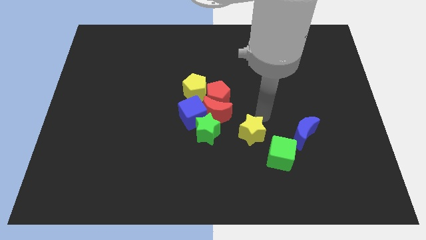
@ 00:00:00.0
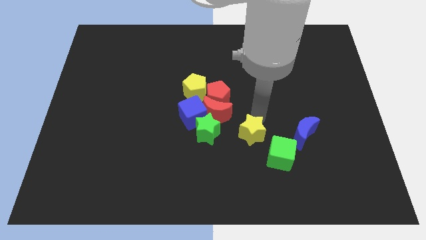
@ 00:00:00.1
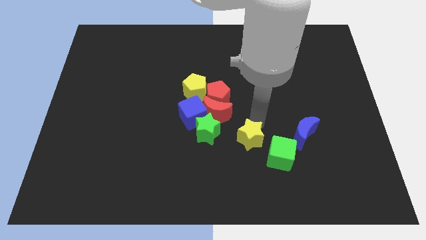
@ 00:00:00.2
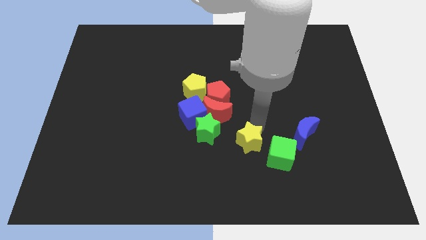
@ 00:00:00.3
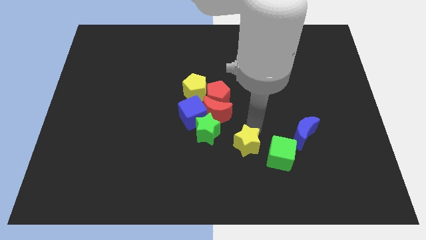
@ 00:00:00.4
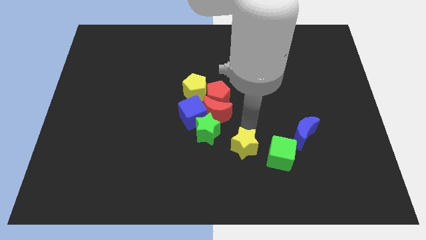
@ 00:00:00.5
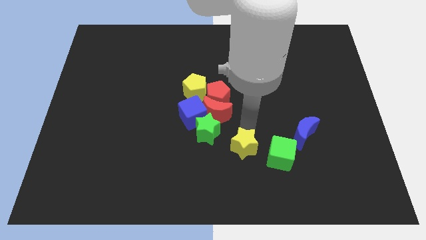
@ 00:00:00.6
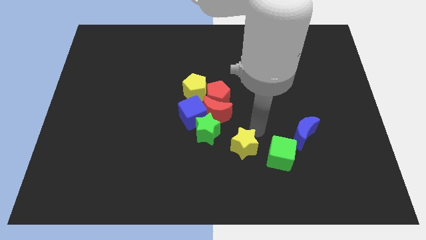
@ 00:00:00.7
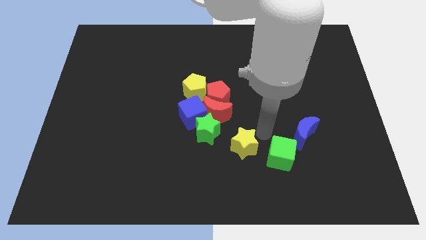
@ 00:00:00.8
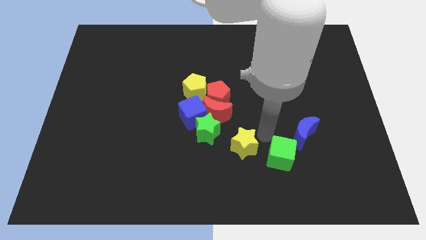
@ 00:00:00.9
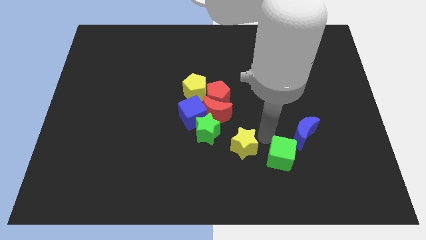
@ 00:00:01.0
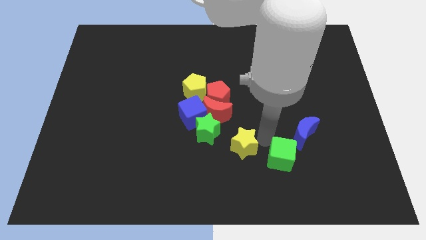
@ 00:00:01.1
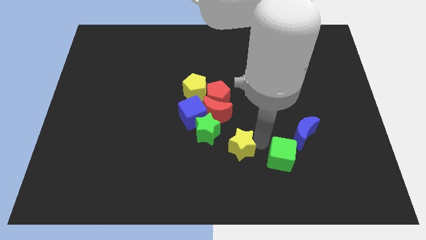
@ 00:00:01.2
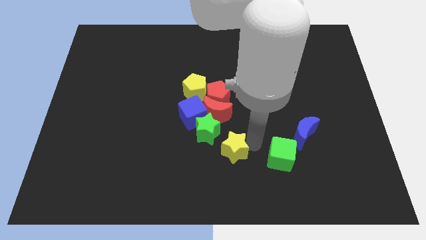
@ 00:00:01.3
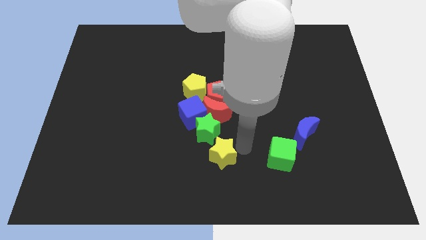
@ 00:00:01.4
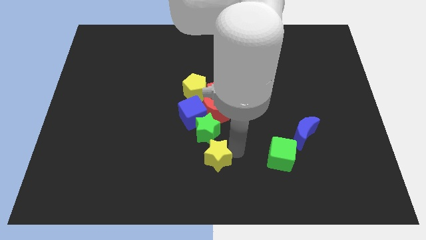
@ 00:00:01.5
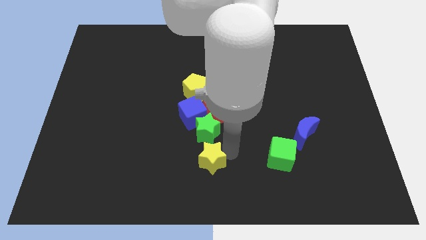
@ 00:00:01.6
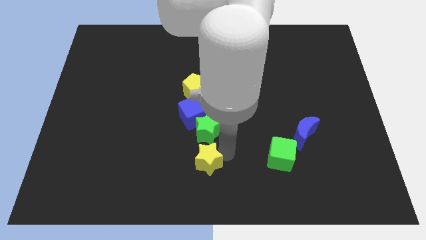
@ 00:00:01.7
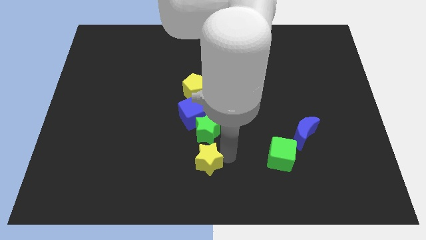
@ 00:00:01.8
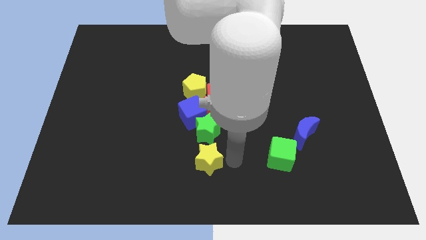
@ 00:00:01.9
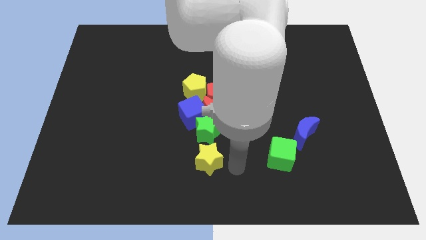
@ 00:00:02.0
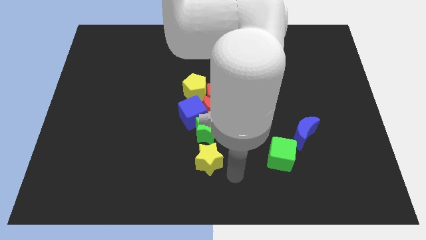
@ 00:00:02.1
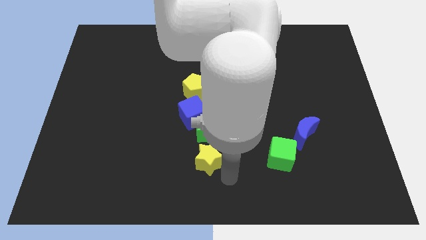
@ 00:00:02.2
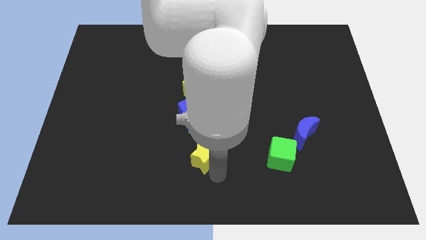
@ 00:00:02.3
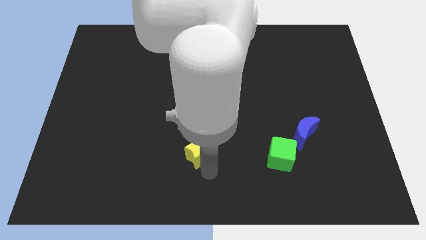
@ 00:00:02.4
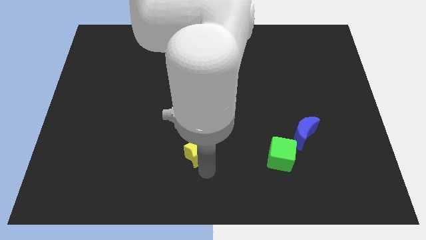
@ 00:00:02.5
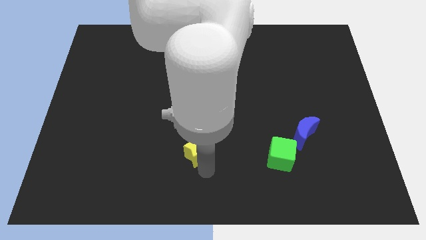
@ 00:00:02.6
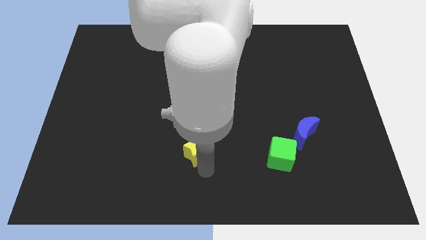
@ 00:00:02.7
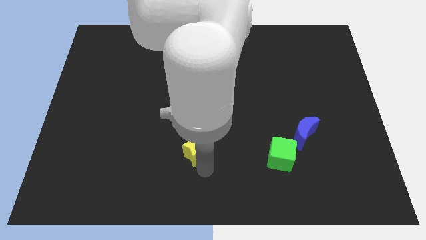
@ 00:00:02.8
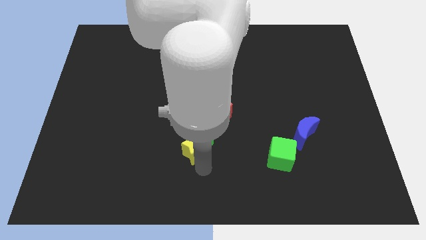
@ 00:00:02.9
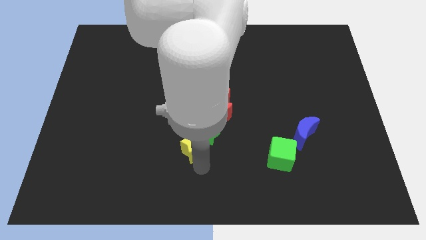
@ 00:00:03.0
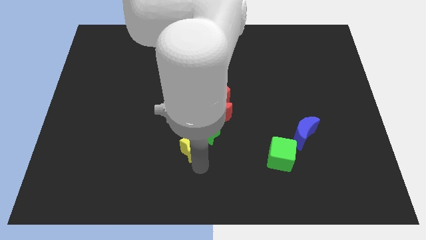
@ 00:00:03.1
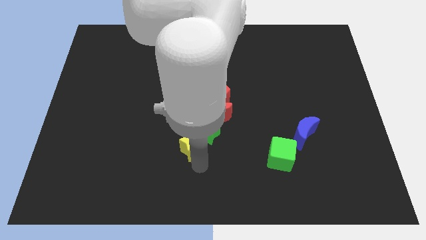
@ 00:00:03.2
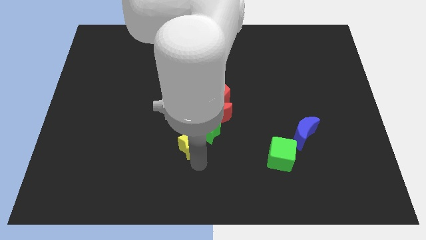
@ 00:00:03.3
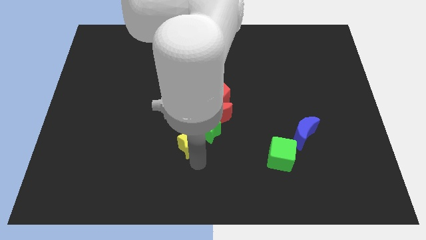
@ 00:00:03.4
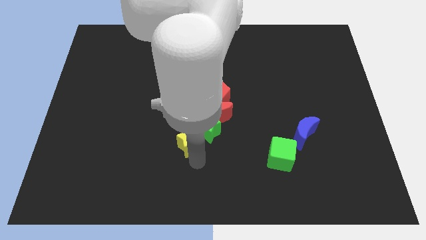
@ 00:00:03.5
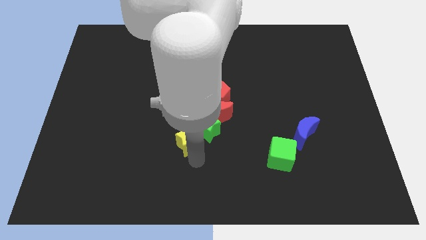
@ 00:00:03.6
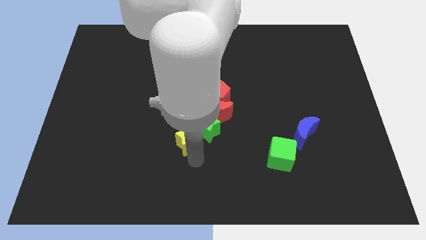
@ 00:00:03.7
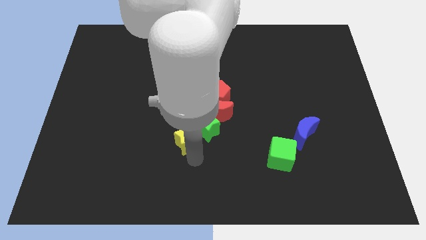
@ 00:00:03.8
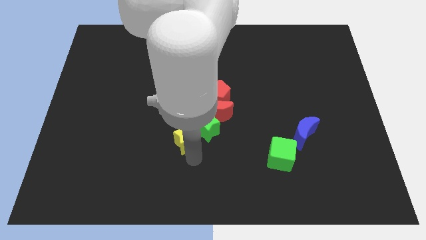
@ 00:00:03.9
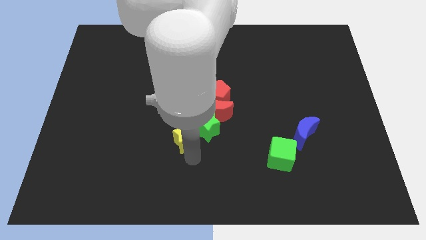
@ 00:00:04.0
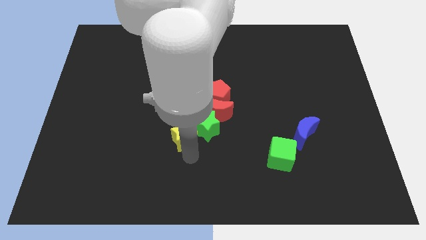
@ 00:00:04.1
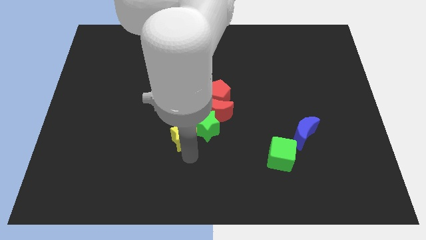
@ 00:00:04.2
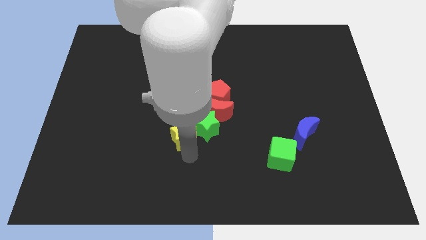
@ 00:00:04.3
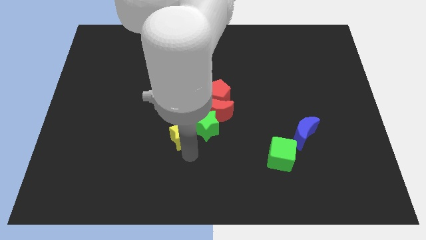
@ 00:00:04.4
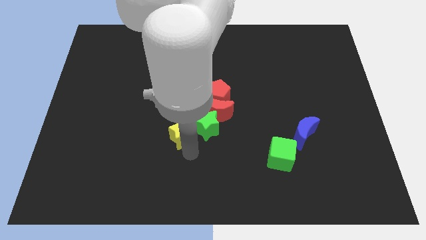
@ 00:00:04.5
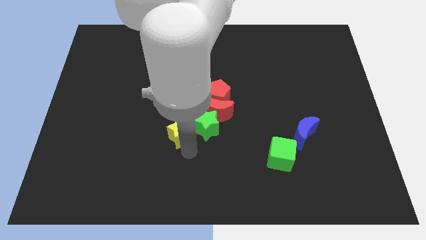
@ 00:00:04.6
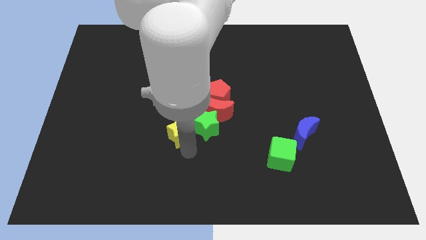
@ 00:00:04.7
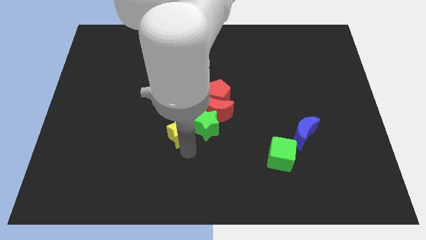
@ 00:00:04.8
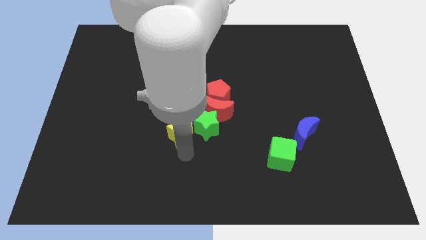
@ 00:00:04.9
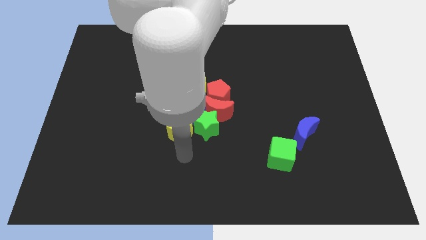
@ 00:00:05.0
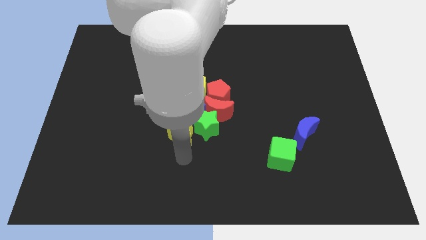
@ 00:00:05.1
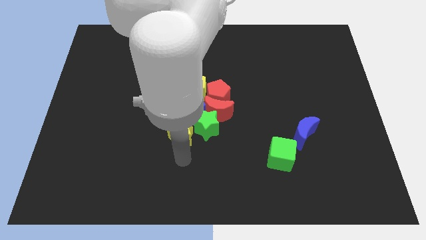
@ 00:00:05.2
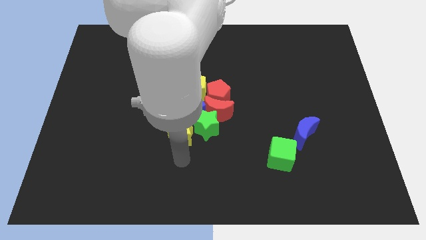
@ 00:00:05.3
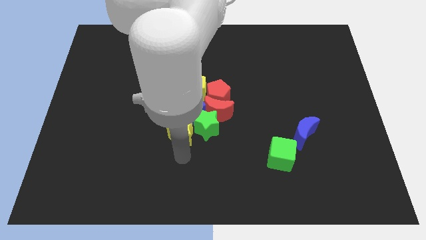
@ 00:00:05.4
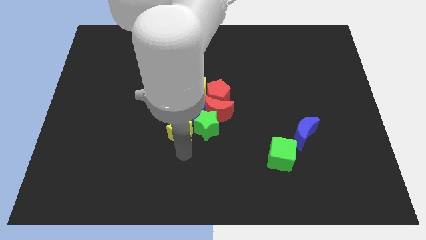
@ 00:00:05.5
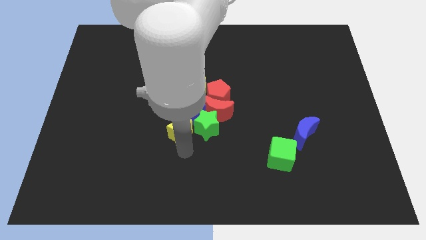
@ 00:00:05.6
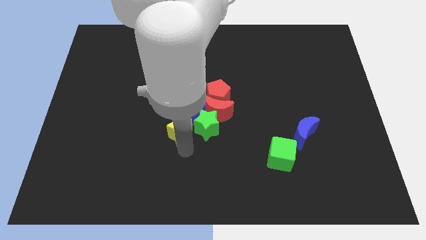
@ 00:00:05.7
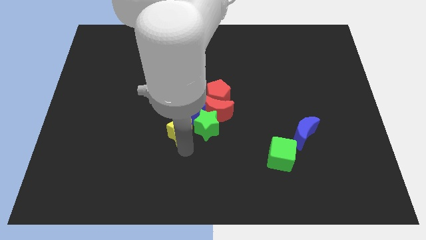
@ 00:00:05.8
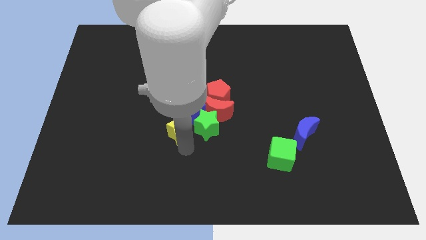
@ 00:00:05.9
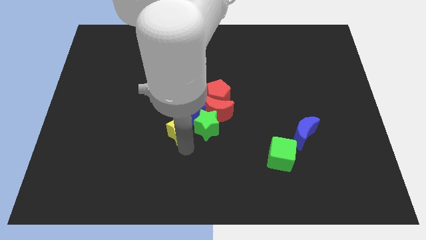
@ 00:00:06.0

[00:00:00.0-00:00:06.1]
place the yellow star to the left of the green star

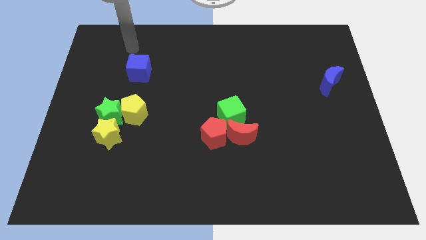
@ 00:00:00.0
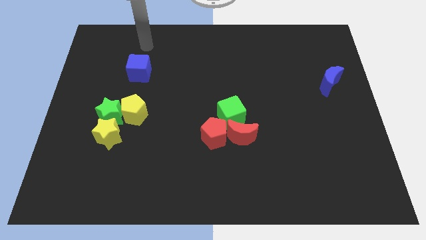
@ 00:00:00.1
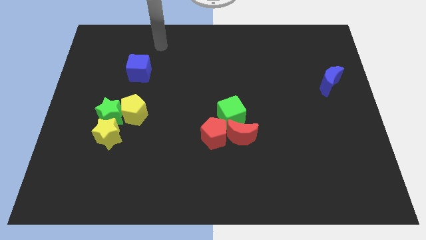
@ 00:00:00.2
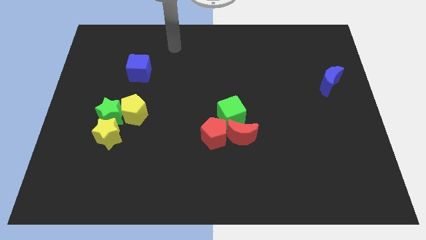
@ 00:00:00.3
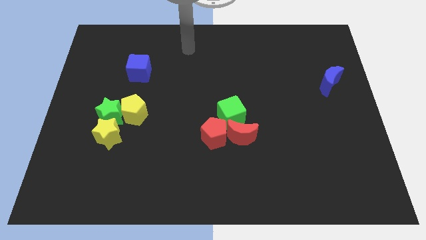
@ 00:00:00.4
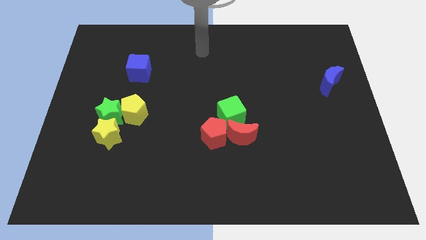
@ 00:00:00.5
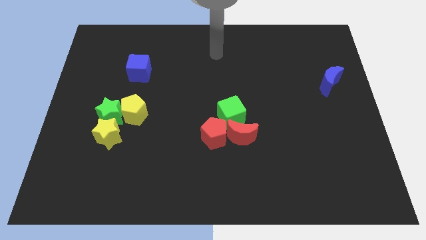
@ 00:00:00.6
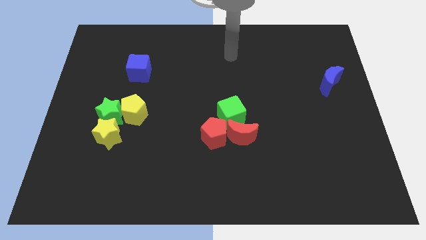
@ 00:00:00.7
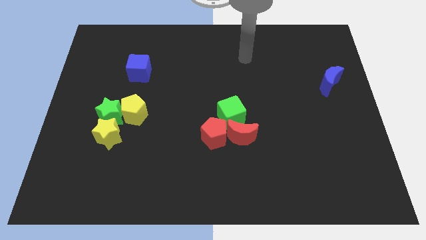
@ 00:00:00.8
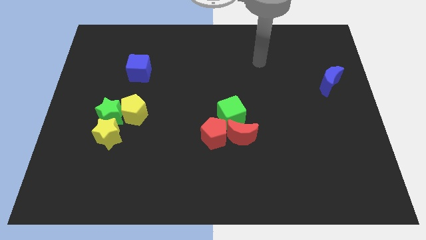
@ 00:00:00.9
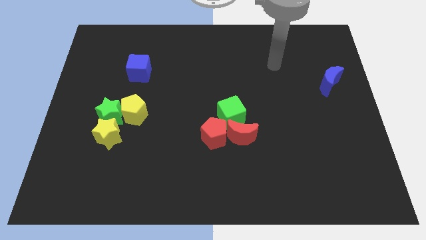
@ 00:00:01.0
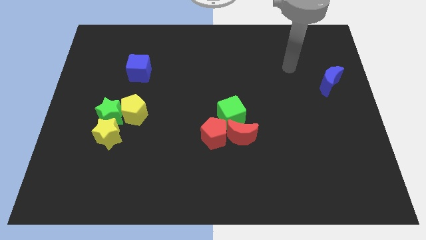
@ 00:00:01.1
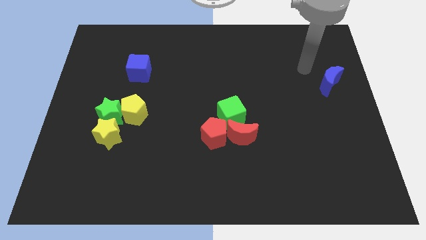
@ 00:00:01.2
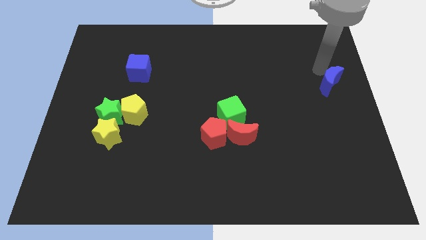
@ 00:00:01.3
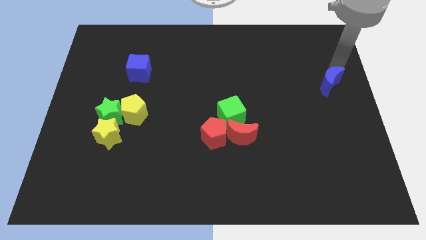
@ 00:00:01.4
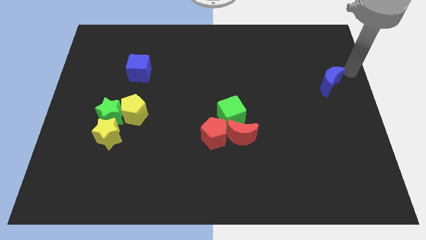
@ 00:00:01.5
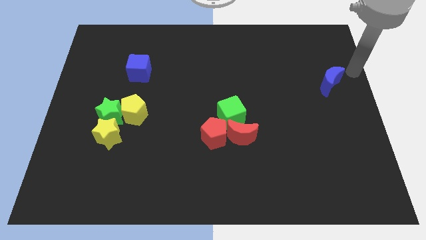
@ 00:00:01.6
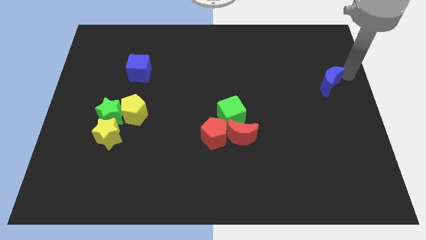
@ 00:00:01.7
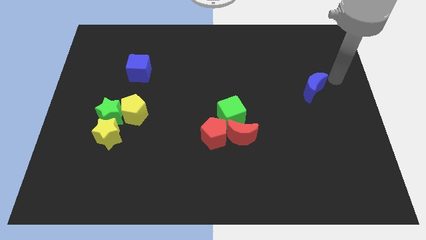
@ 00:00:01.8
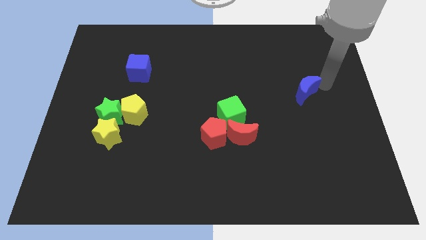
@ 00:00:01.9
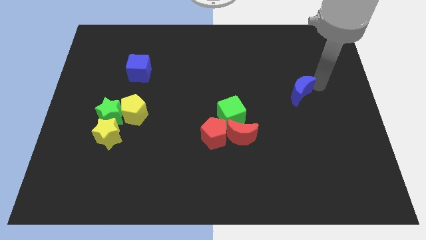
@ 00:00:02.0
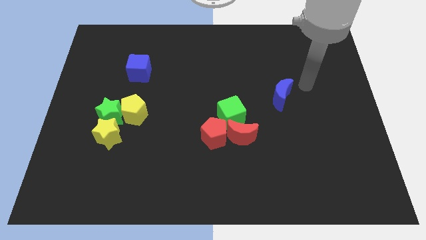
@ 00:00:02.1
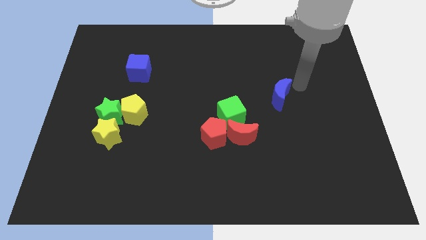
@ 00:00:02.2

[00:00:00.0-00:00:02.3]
slide the blue moon to the right side of the green cube

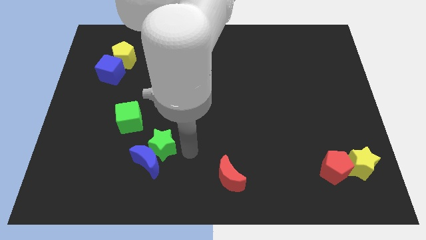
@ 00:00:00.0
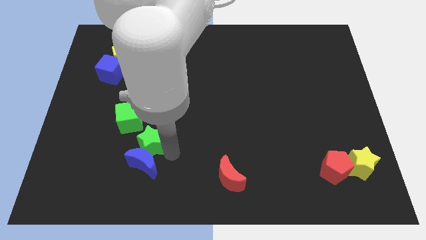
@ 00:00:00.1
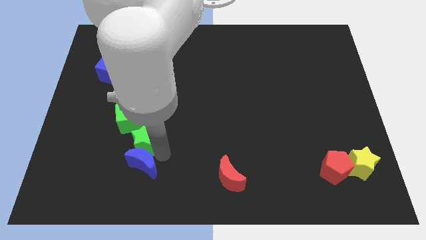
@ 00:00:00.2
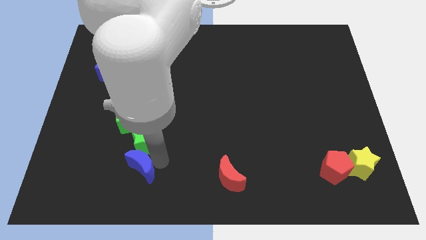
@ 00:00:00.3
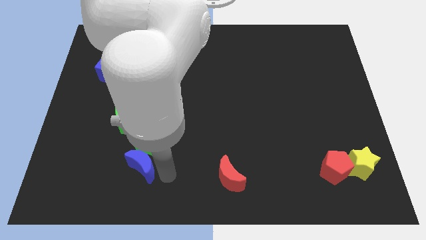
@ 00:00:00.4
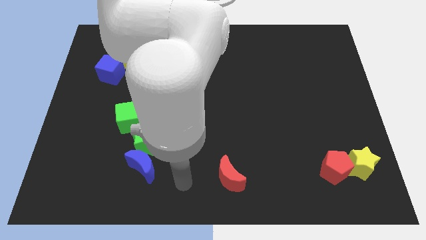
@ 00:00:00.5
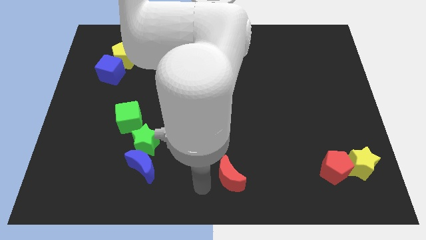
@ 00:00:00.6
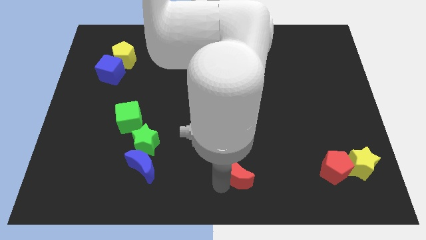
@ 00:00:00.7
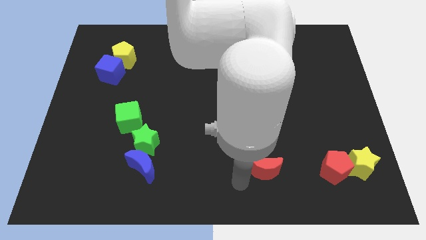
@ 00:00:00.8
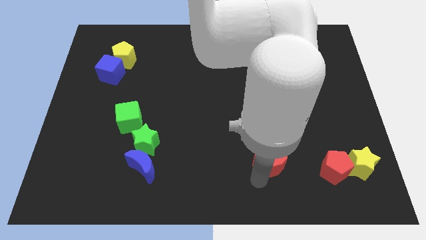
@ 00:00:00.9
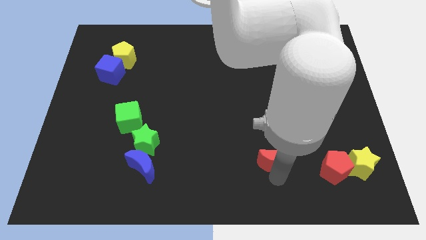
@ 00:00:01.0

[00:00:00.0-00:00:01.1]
place red moon to the left of red pentagon
